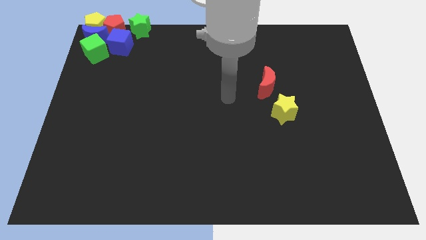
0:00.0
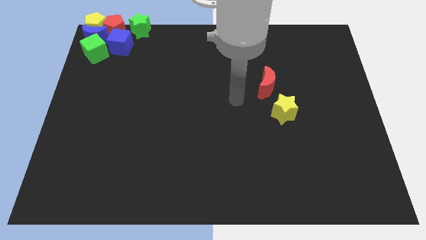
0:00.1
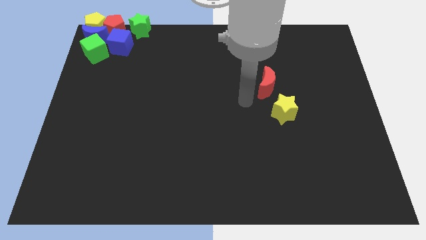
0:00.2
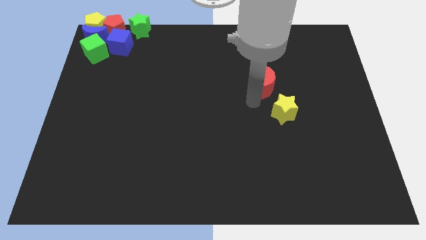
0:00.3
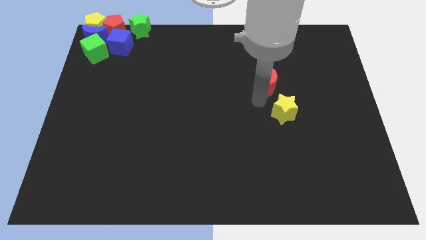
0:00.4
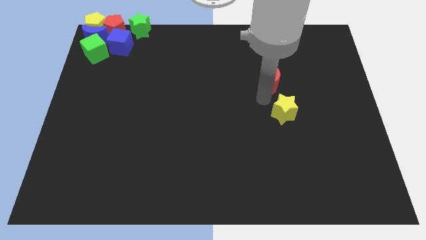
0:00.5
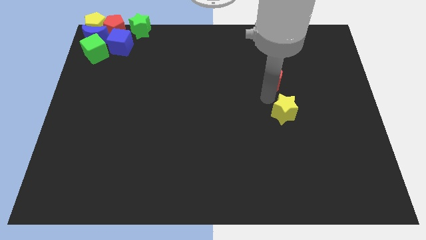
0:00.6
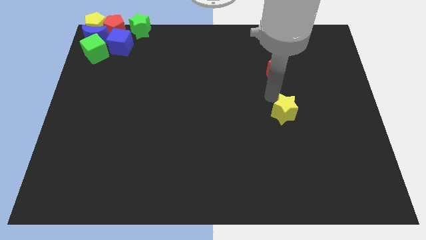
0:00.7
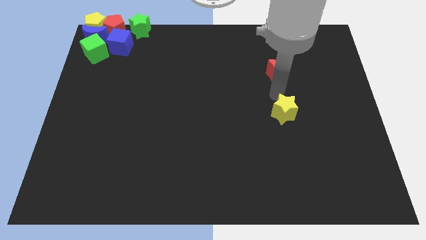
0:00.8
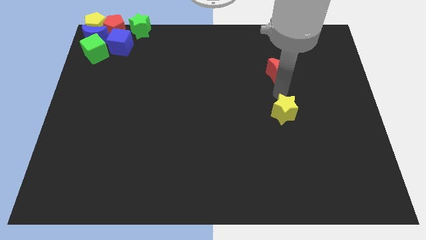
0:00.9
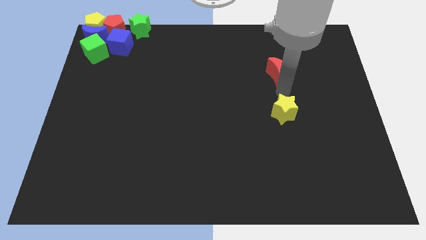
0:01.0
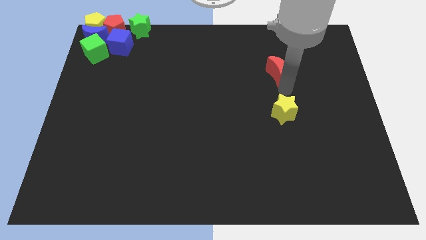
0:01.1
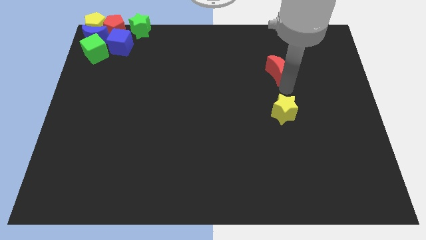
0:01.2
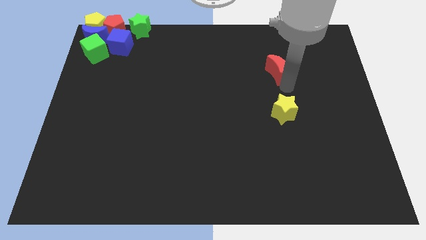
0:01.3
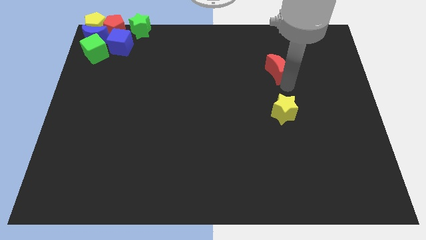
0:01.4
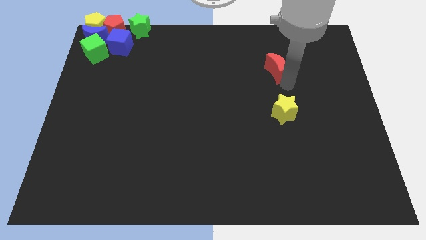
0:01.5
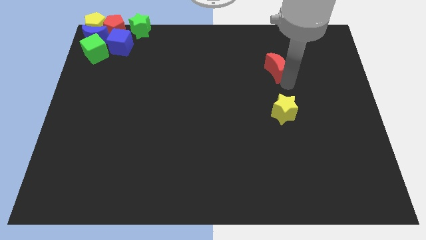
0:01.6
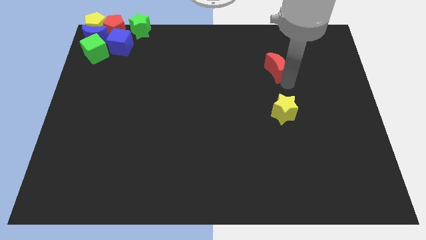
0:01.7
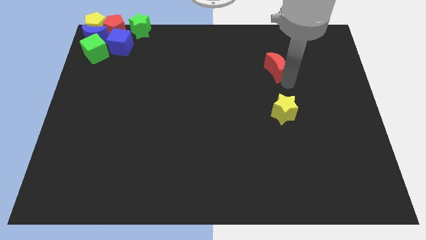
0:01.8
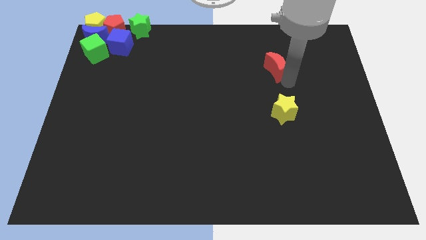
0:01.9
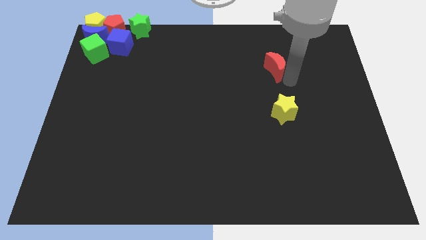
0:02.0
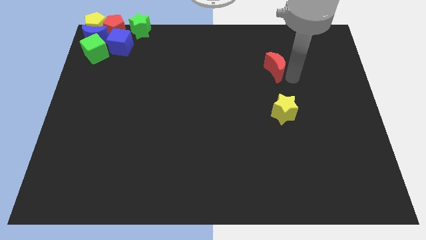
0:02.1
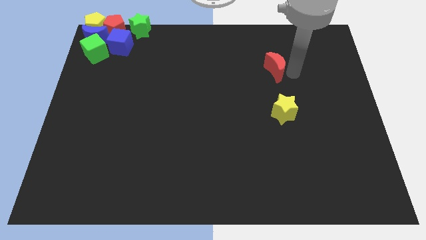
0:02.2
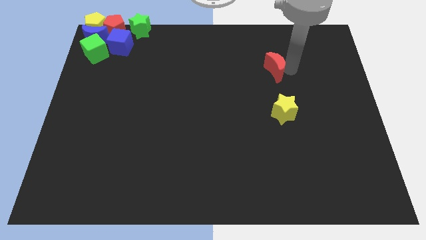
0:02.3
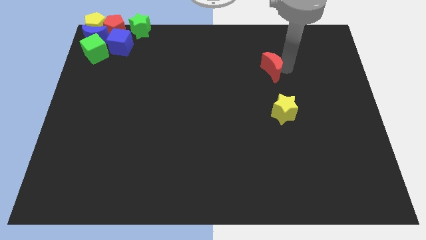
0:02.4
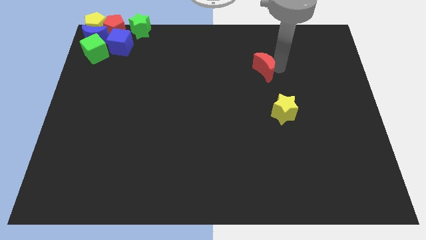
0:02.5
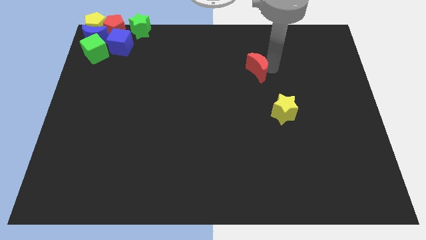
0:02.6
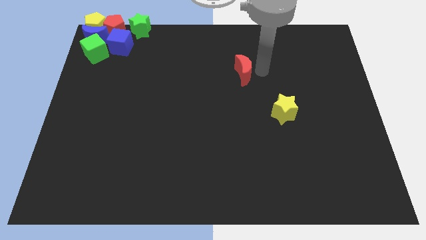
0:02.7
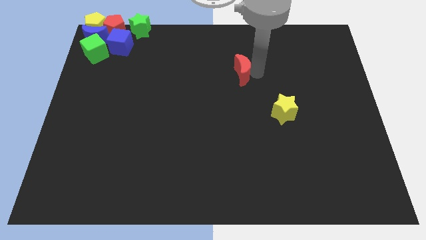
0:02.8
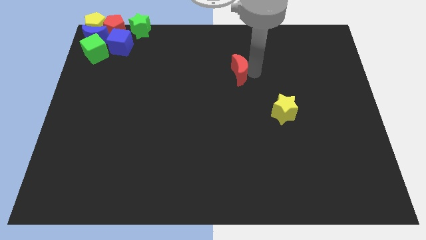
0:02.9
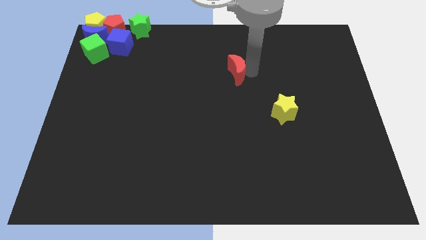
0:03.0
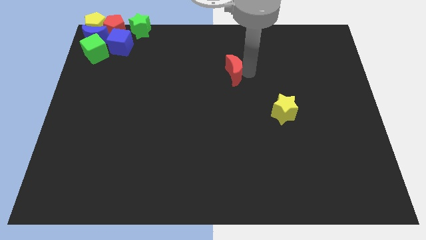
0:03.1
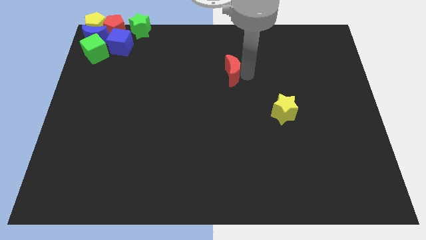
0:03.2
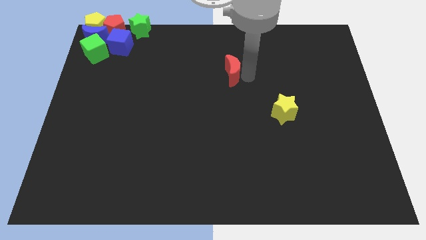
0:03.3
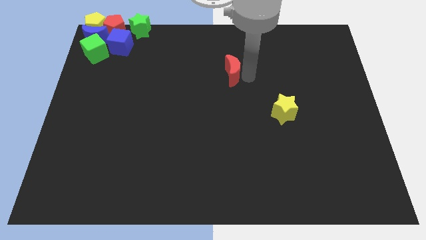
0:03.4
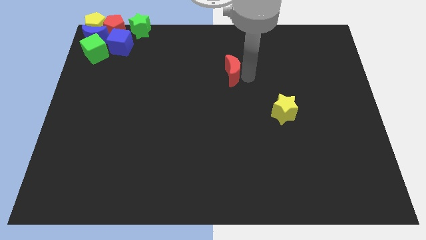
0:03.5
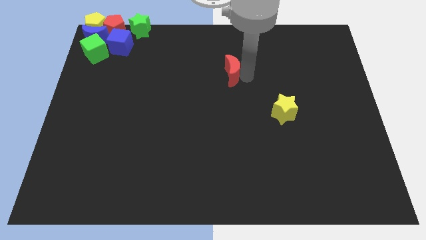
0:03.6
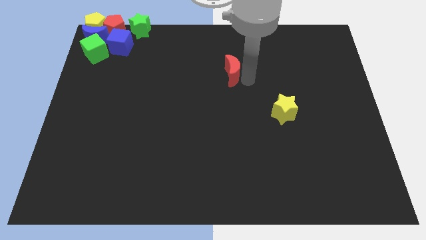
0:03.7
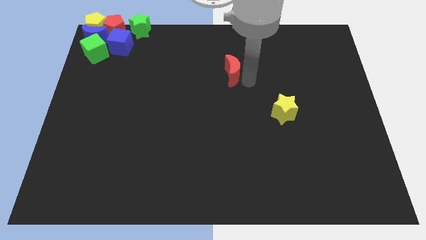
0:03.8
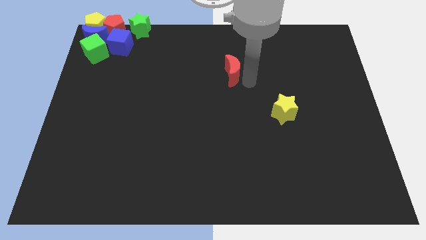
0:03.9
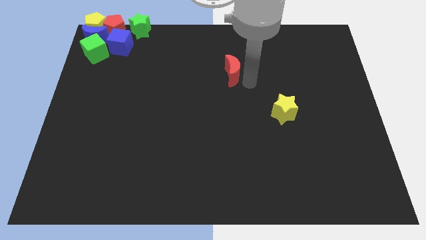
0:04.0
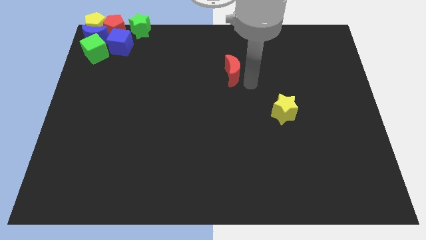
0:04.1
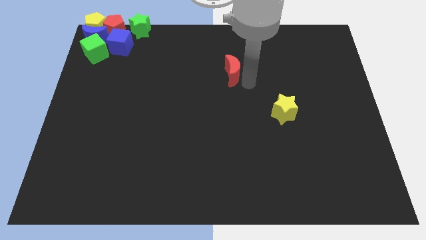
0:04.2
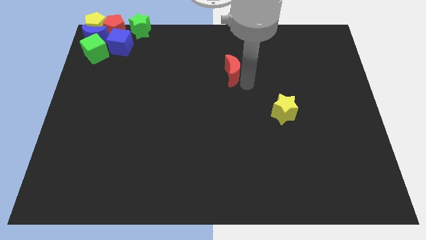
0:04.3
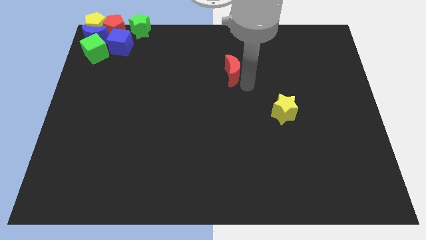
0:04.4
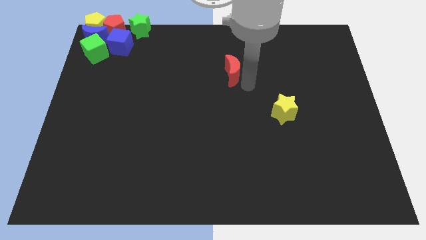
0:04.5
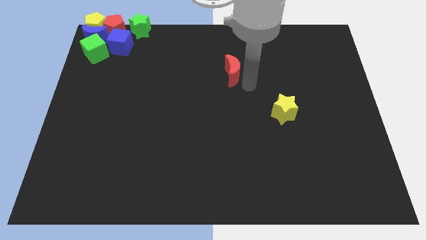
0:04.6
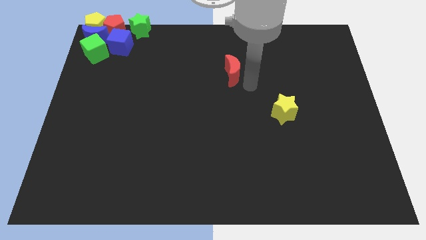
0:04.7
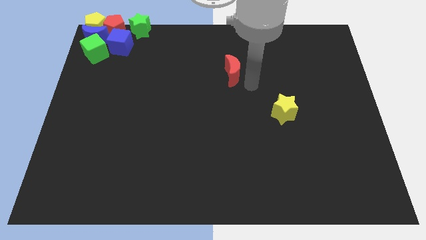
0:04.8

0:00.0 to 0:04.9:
push the red moon towards left

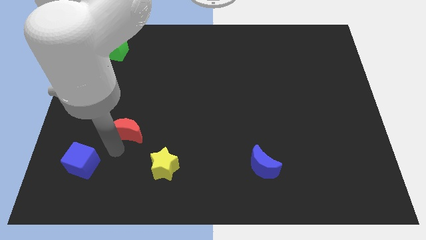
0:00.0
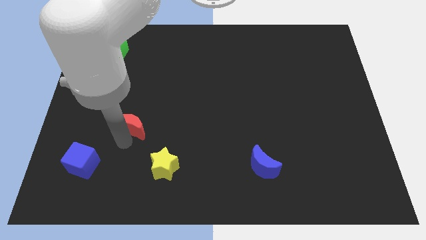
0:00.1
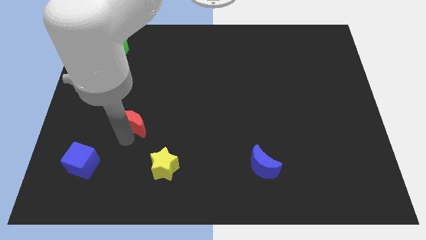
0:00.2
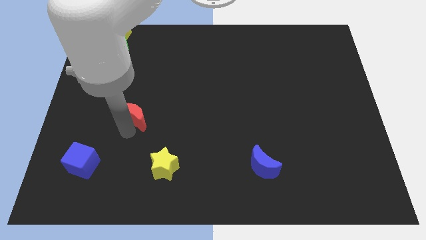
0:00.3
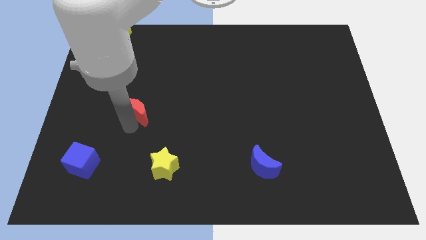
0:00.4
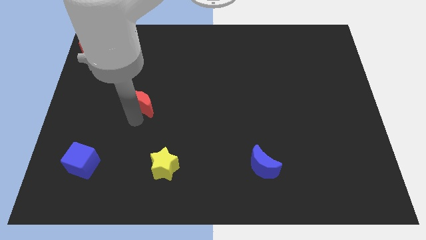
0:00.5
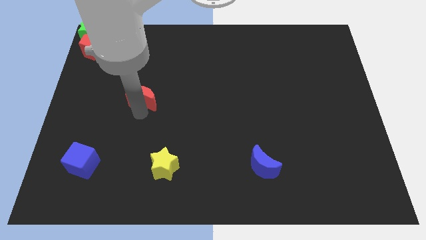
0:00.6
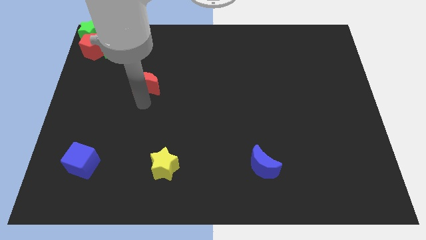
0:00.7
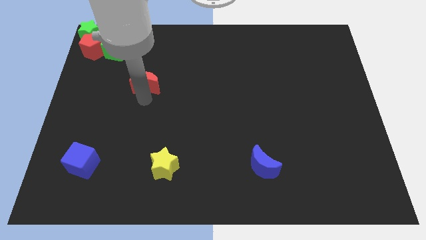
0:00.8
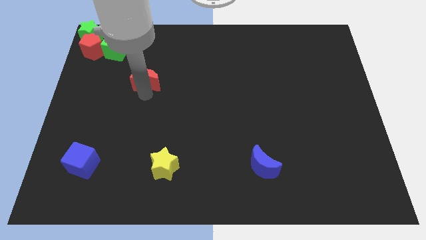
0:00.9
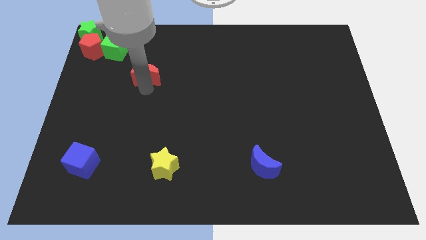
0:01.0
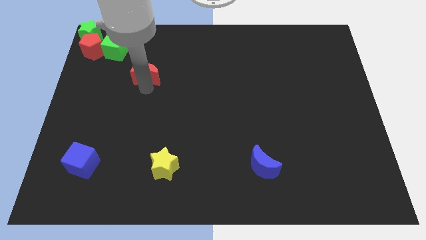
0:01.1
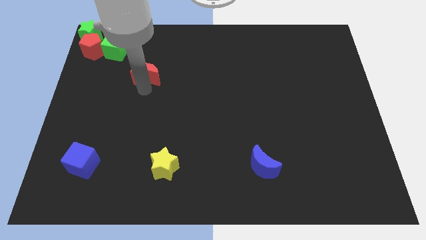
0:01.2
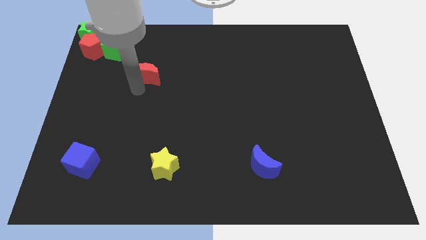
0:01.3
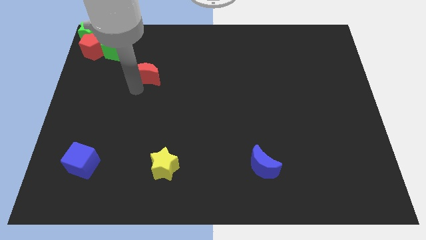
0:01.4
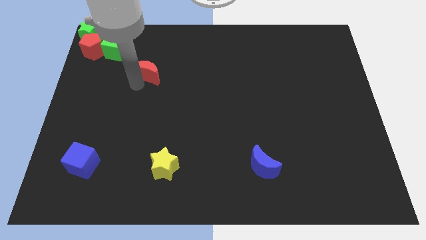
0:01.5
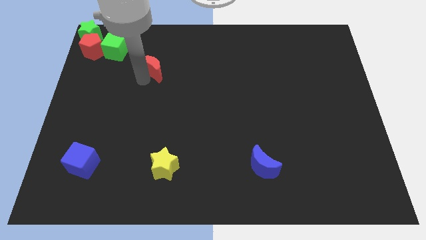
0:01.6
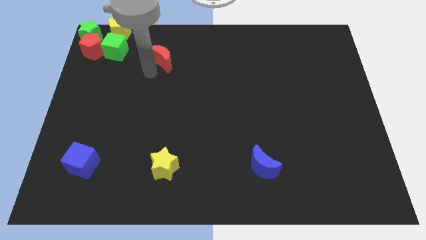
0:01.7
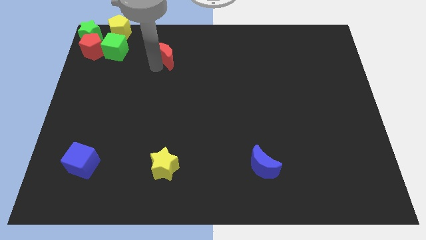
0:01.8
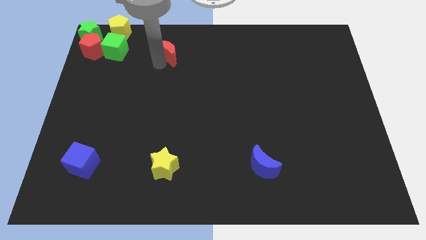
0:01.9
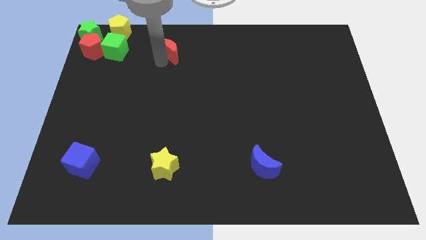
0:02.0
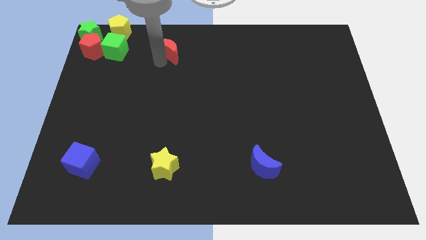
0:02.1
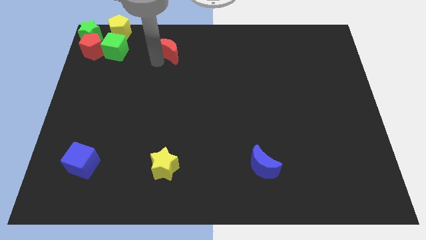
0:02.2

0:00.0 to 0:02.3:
move the red crescent to the right side of the green cube

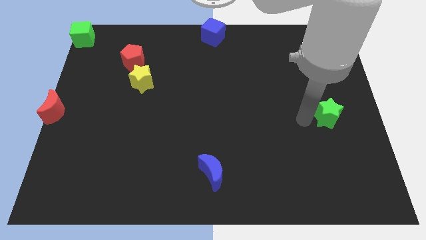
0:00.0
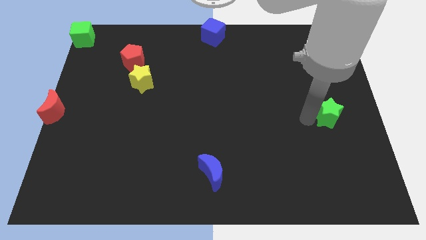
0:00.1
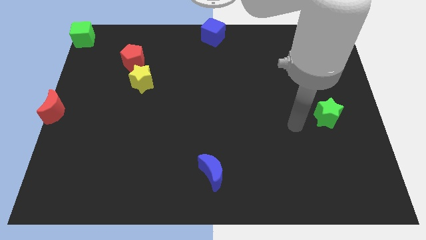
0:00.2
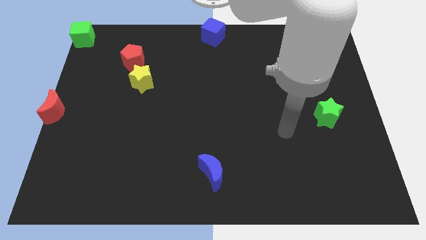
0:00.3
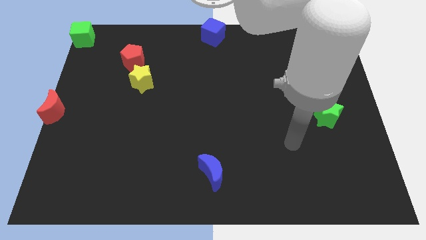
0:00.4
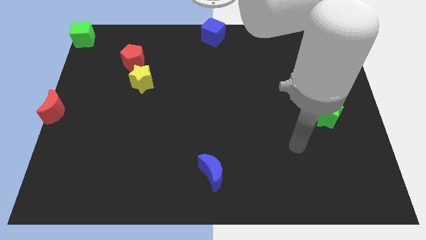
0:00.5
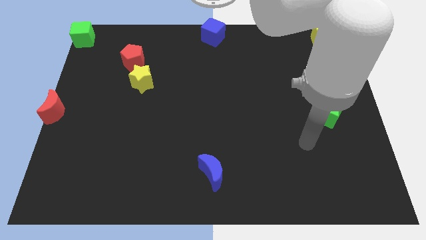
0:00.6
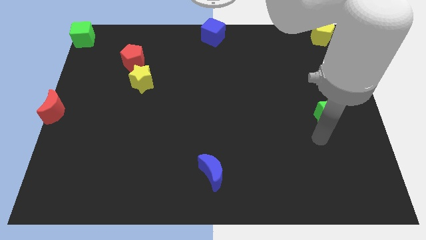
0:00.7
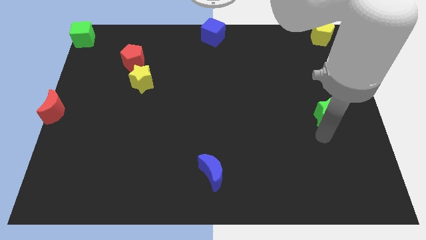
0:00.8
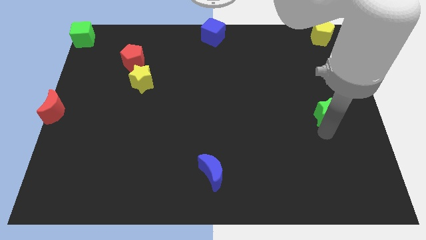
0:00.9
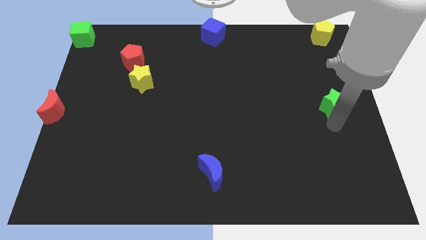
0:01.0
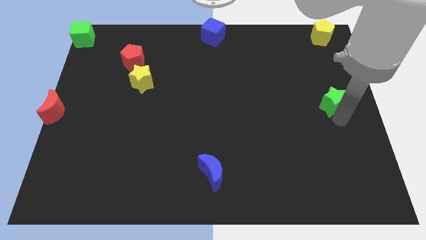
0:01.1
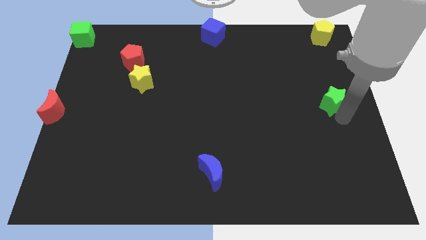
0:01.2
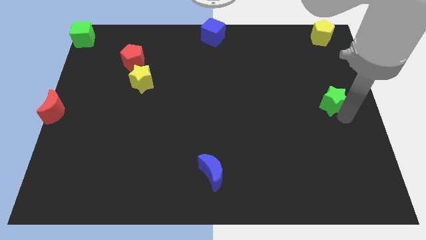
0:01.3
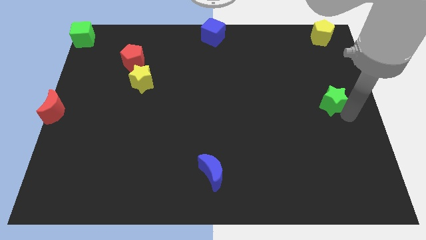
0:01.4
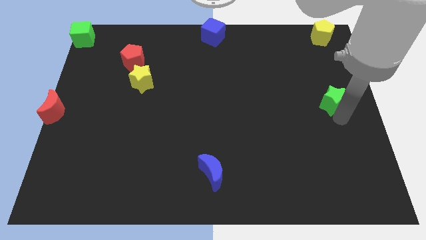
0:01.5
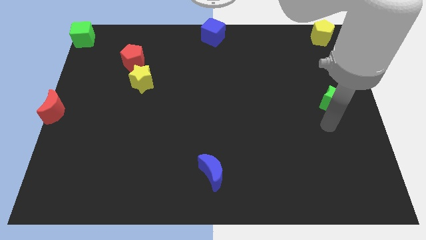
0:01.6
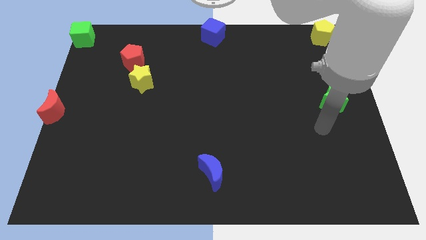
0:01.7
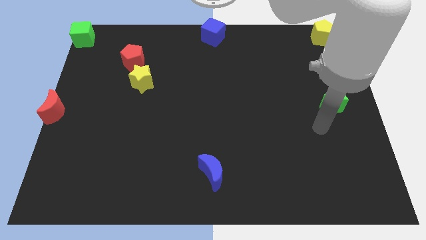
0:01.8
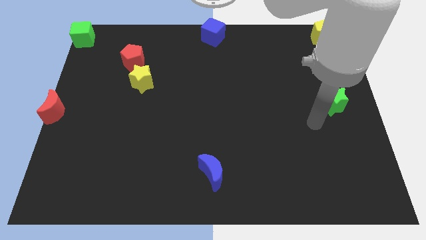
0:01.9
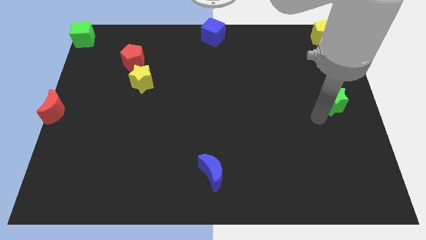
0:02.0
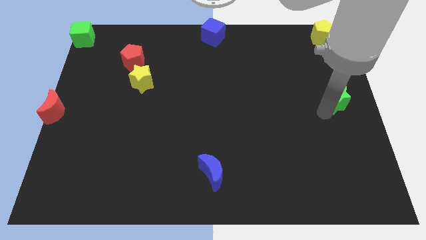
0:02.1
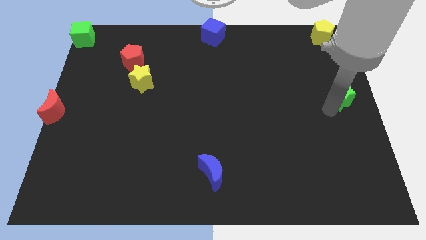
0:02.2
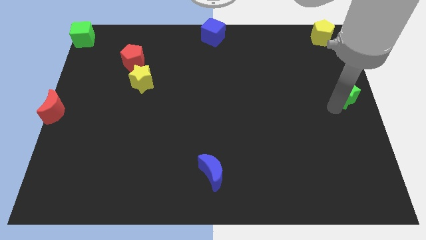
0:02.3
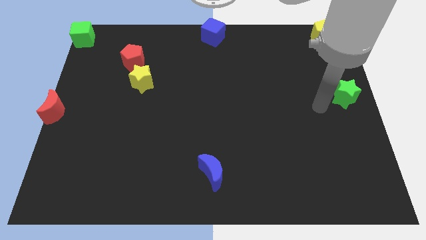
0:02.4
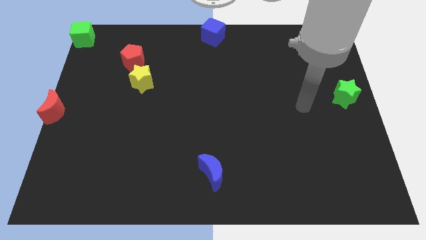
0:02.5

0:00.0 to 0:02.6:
push the green star to the center right of the board
